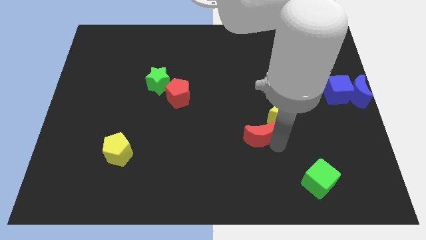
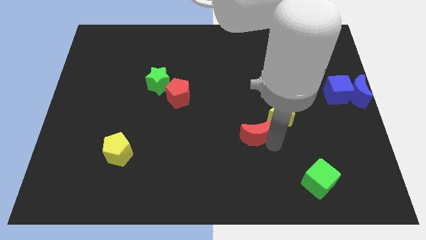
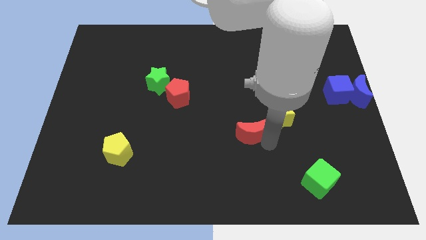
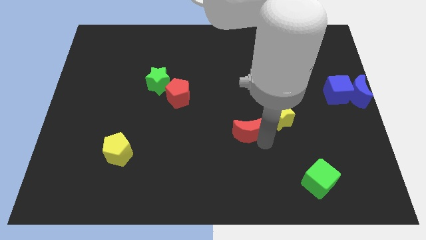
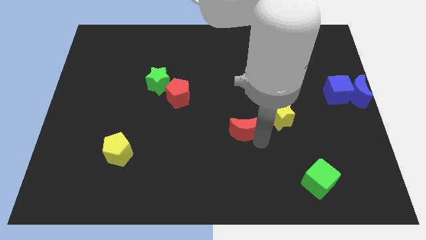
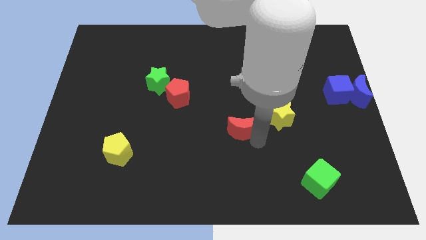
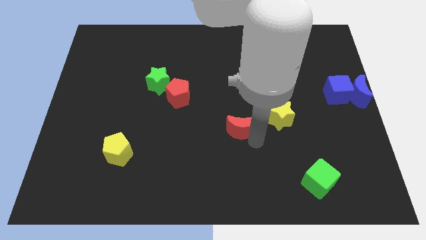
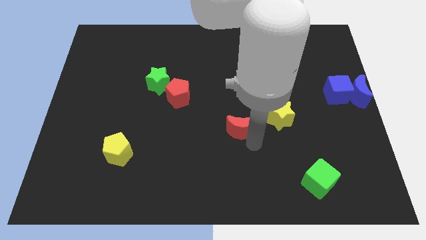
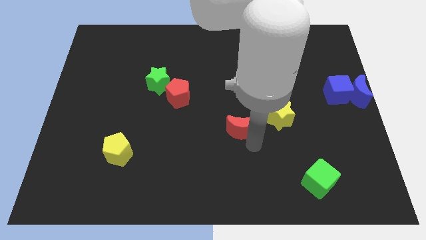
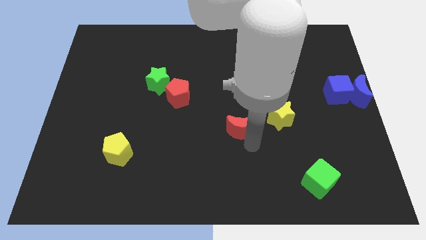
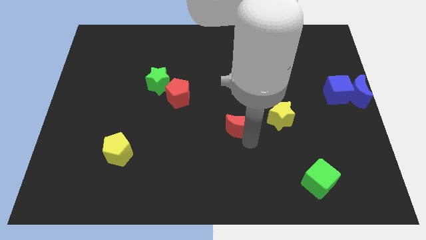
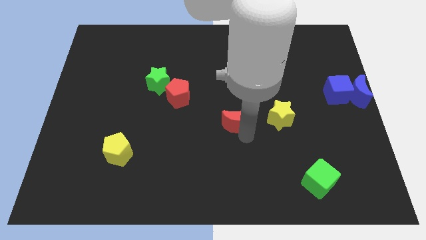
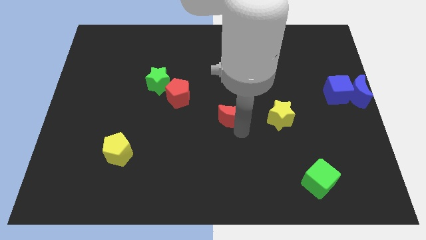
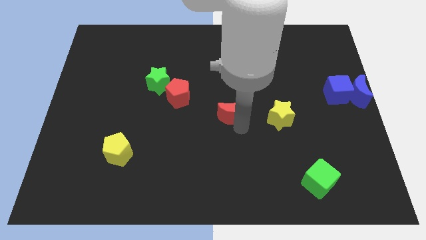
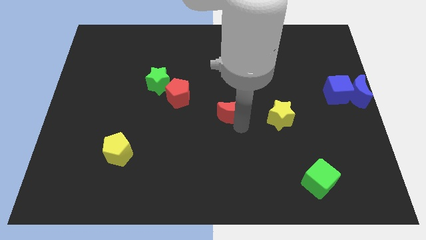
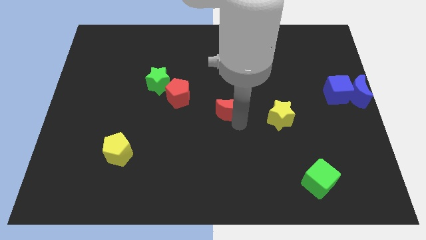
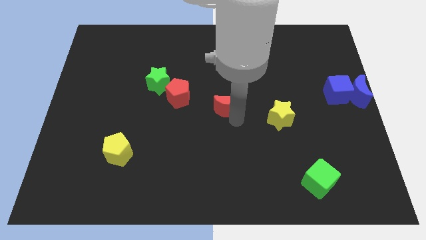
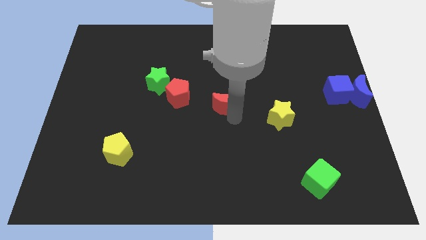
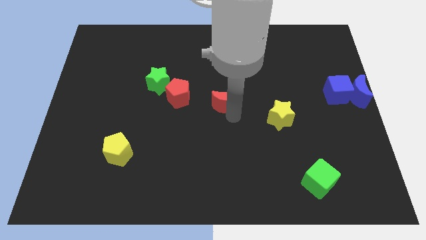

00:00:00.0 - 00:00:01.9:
place the red moon beside the red pentagon to form a line

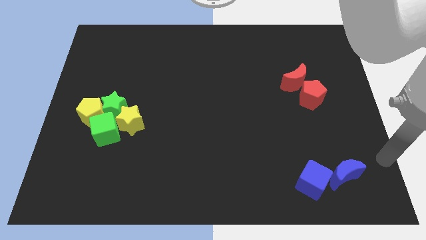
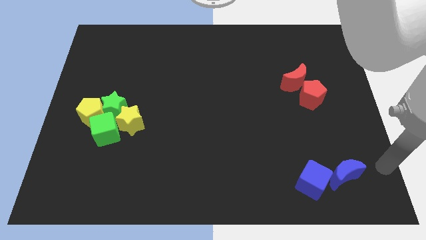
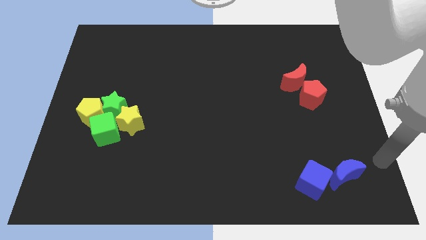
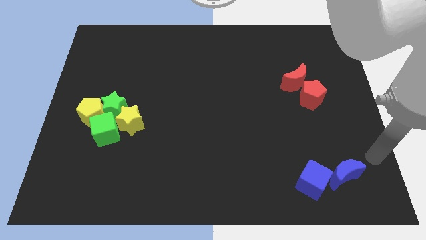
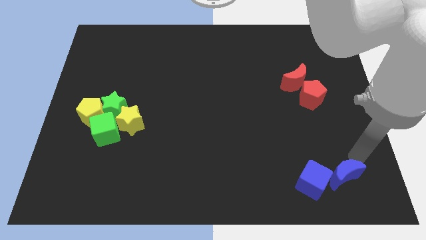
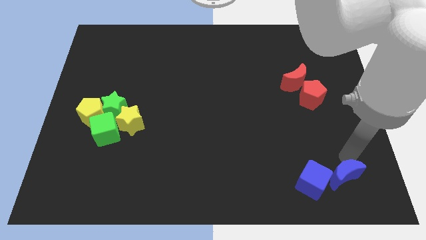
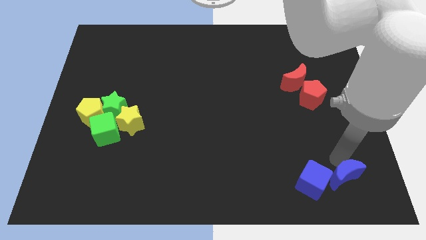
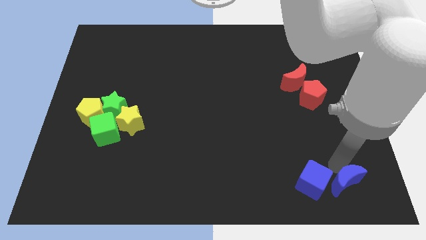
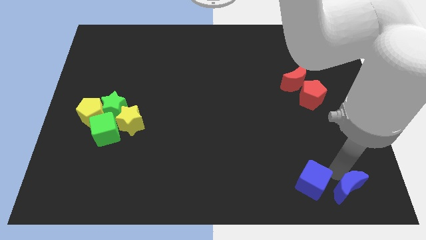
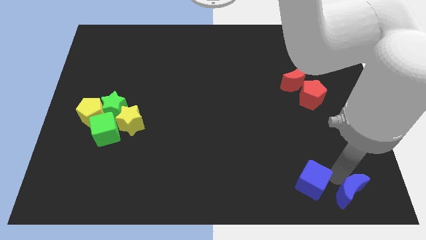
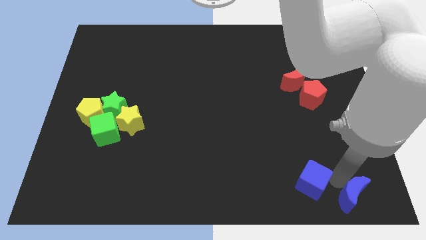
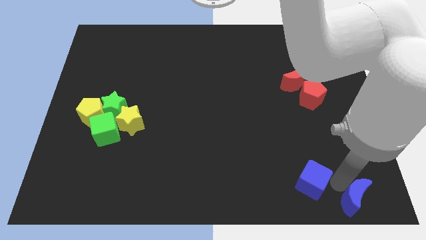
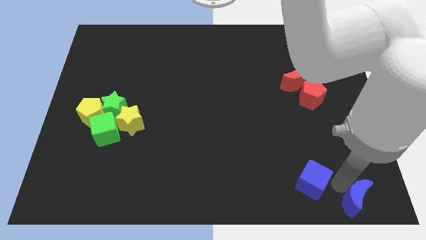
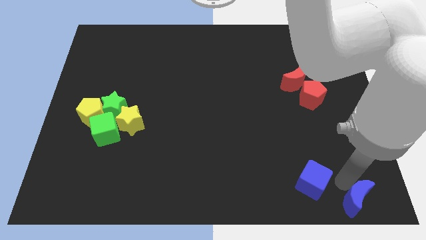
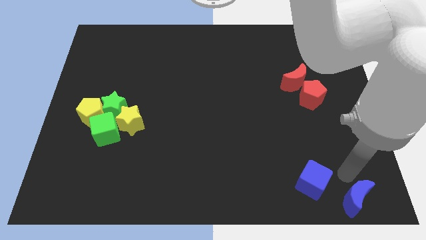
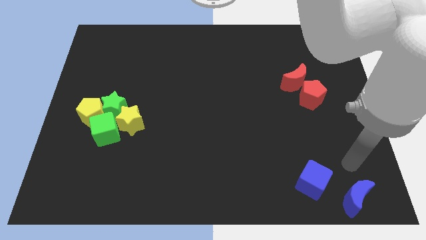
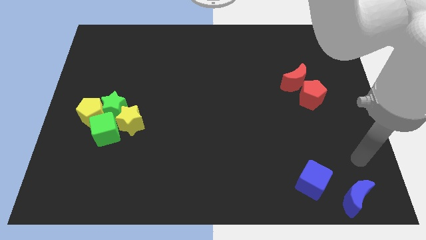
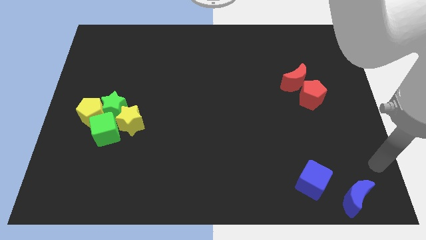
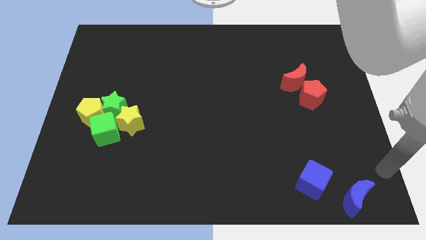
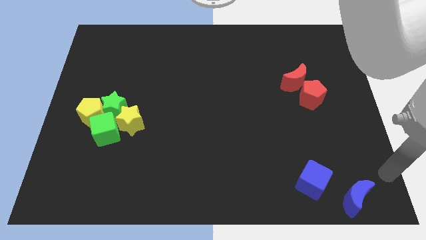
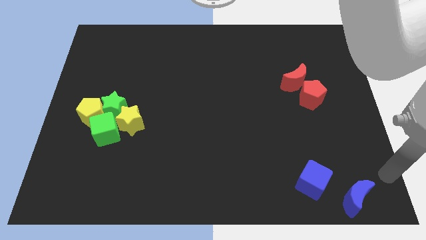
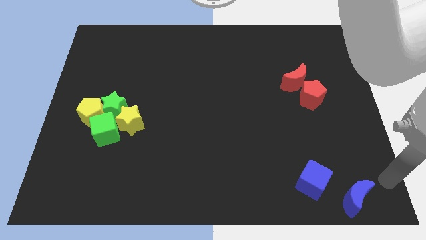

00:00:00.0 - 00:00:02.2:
slightly move the blue moon towards bottom right side of the board

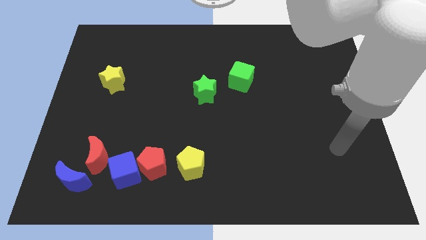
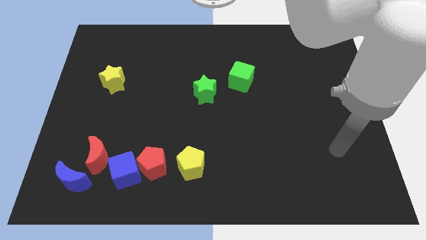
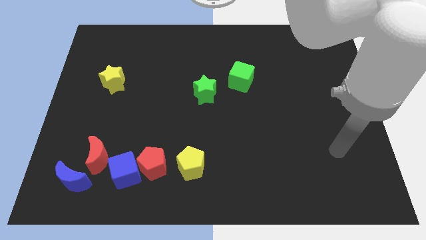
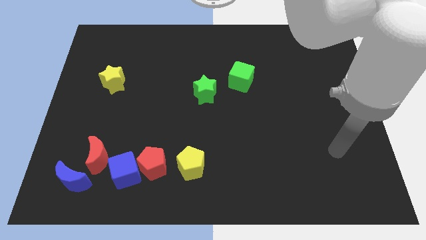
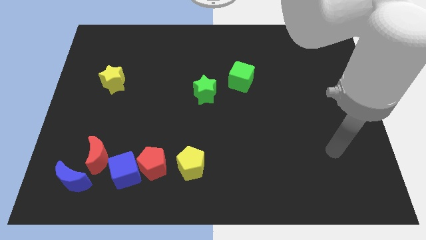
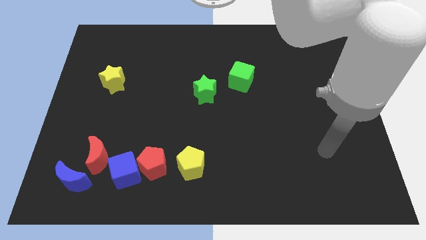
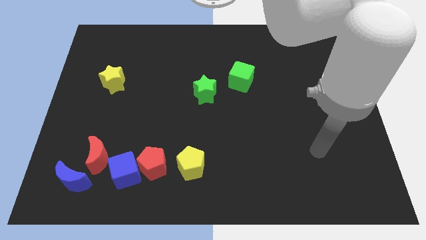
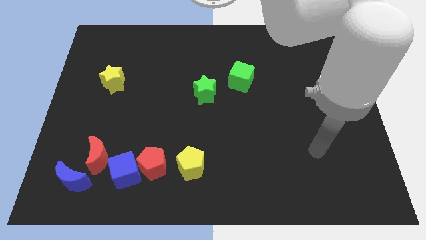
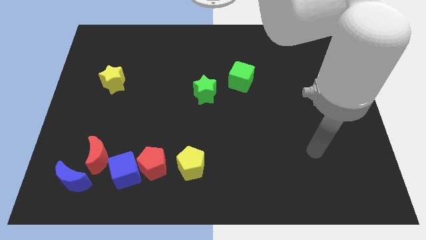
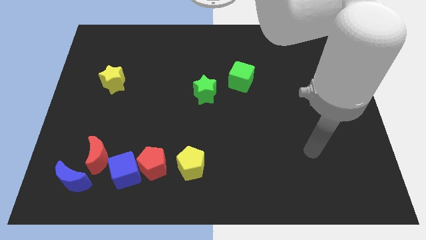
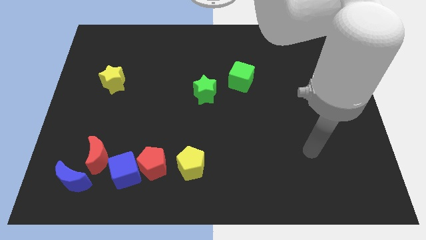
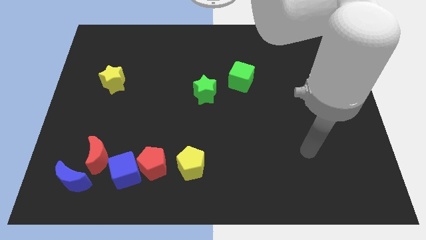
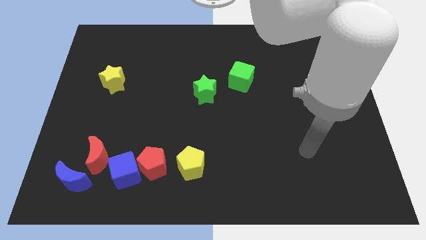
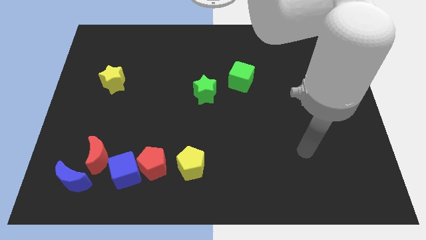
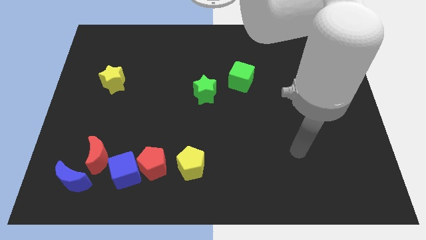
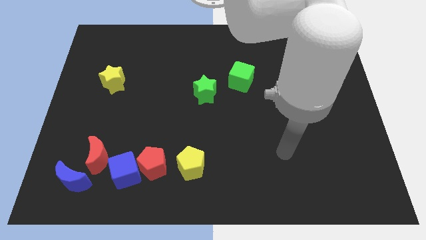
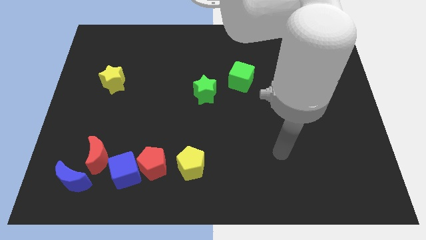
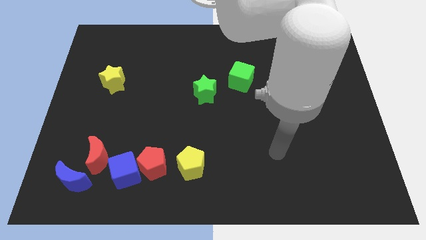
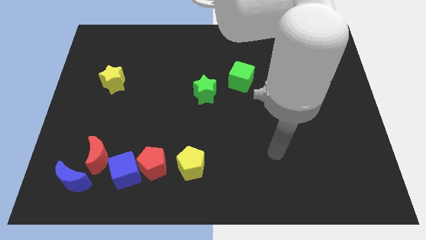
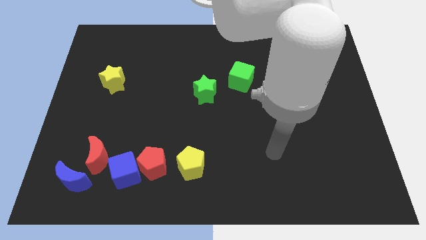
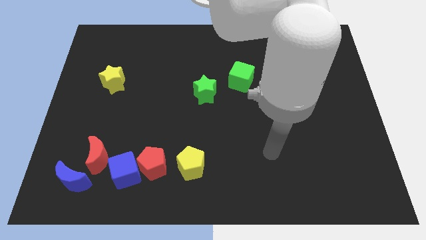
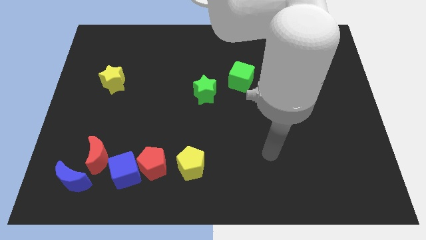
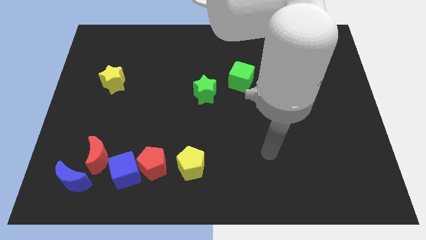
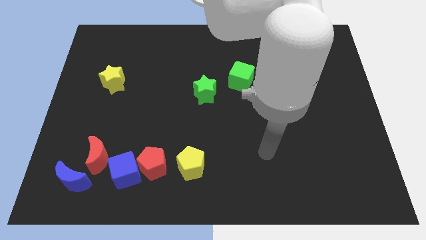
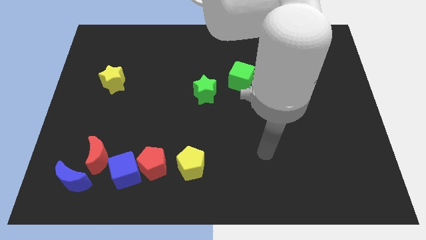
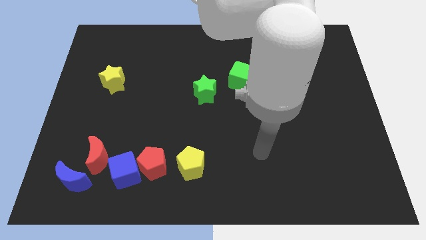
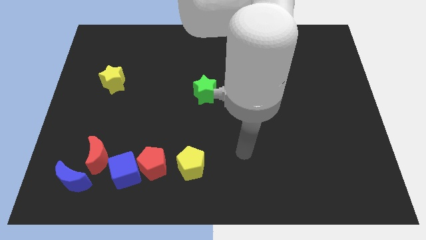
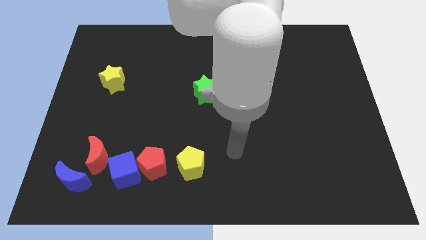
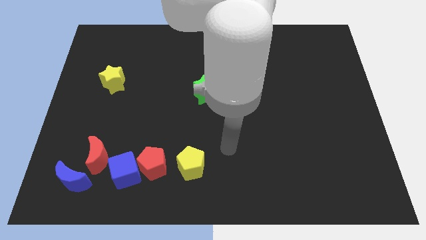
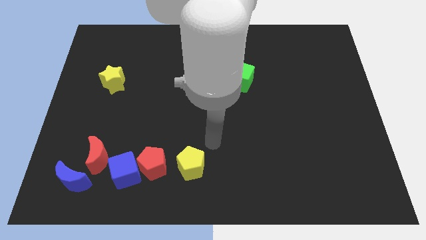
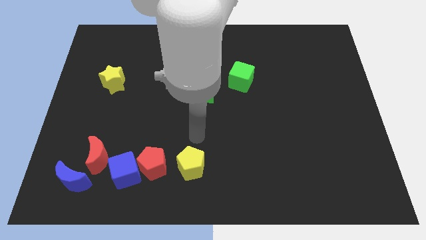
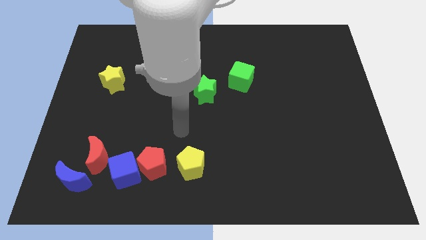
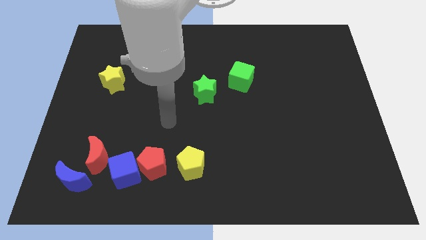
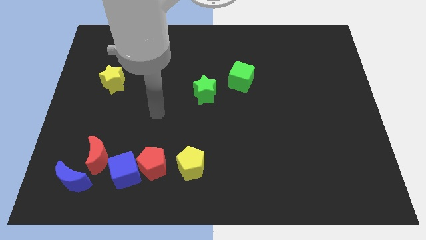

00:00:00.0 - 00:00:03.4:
place your hand above the red pentagon

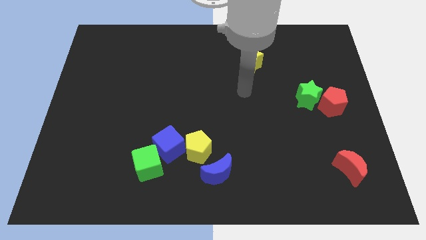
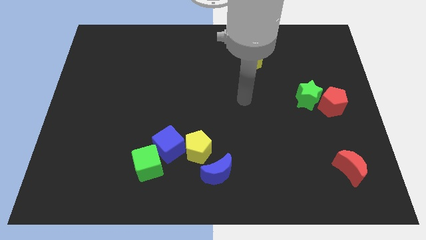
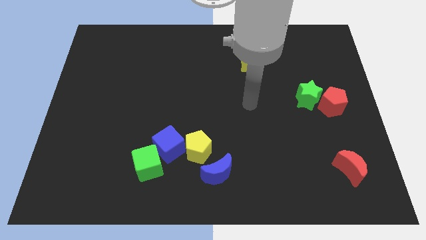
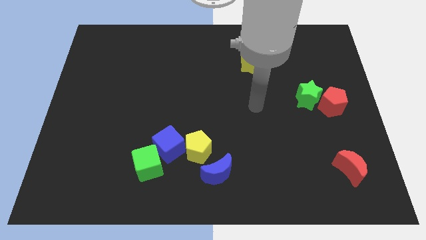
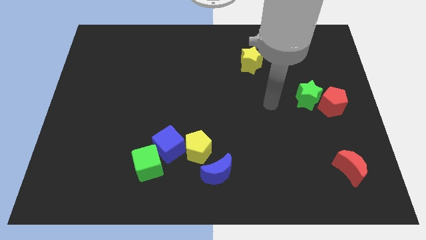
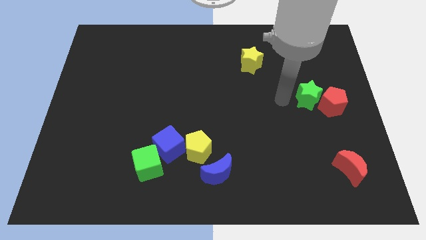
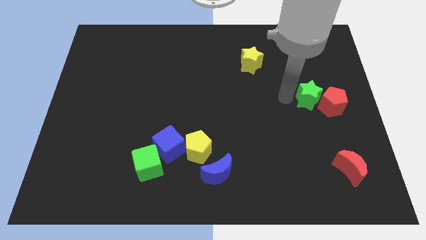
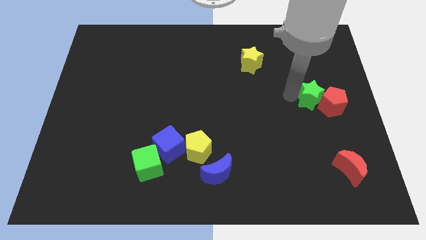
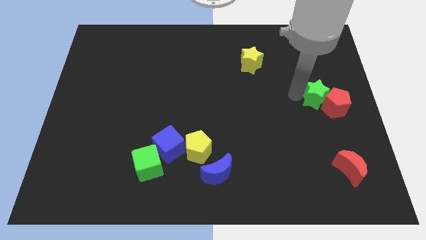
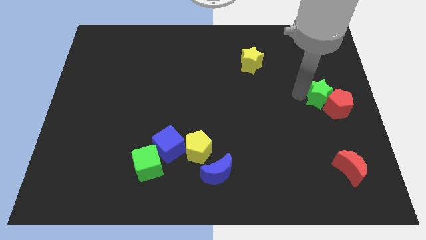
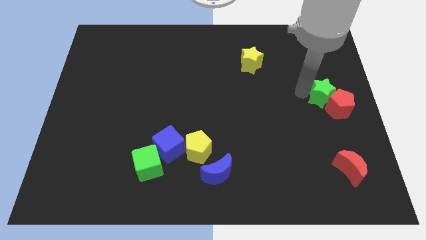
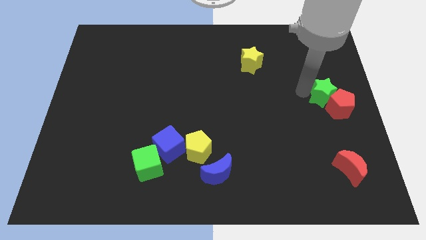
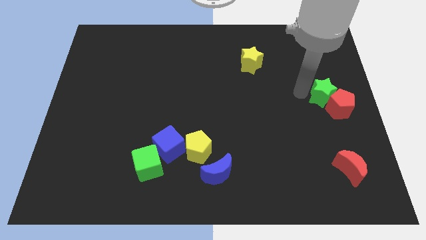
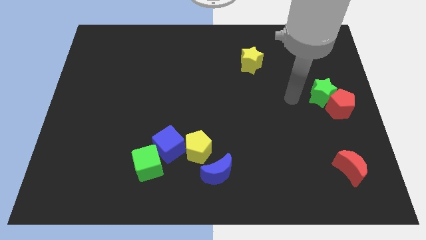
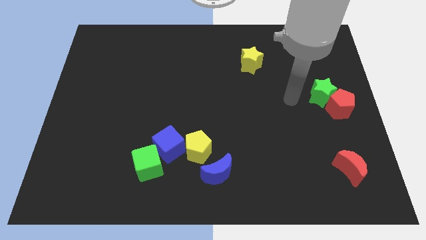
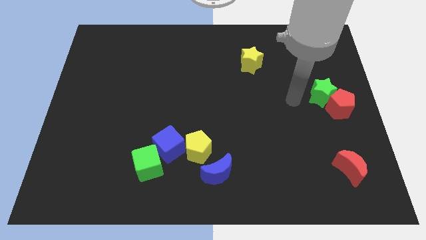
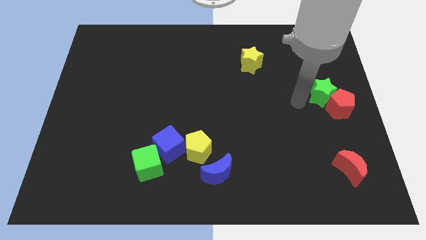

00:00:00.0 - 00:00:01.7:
move green star into red pentagon
